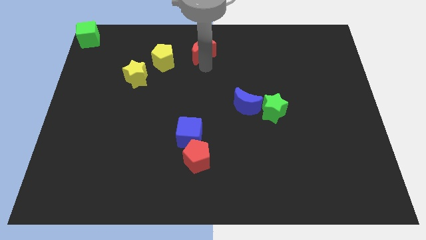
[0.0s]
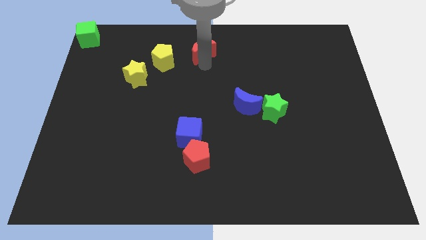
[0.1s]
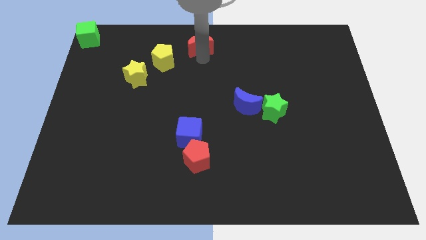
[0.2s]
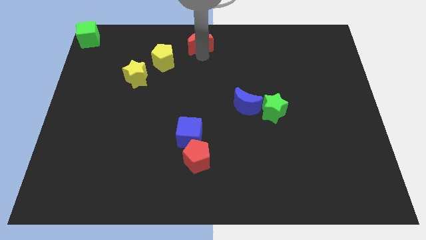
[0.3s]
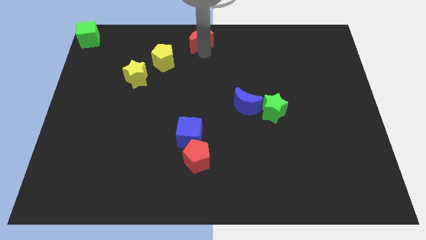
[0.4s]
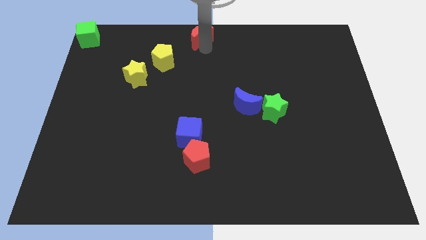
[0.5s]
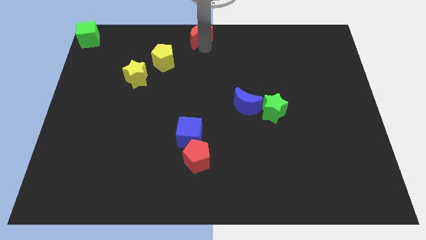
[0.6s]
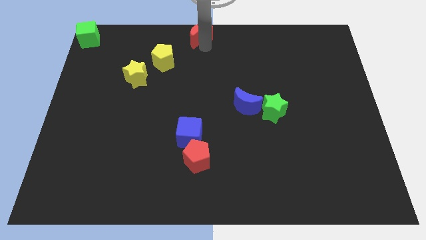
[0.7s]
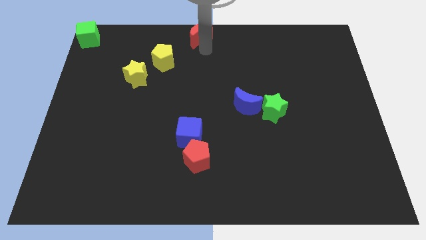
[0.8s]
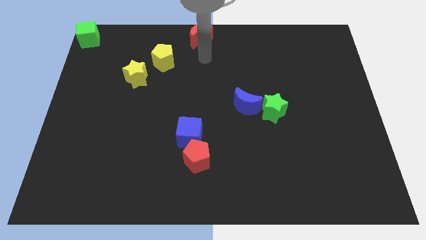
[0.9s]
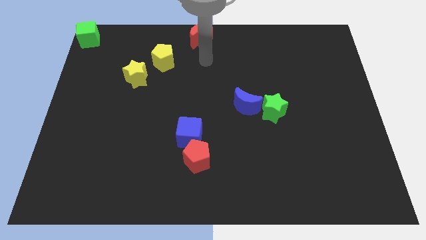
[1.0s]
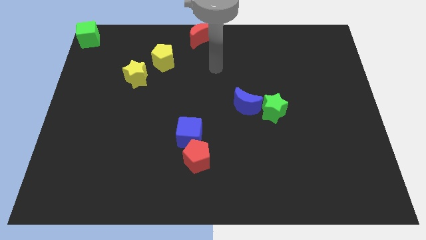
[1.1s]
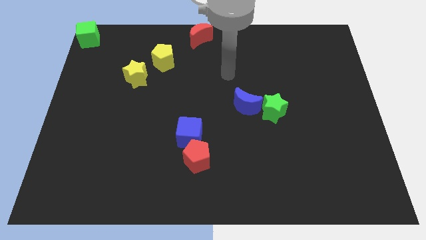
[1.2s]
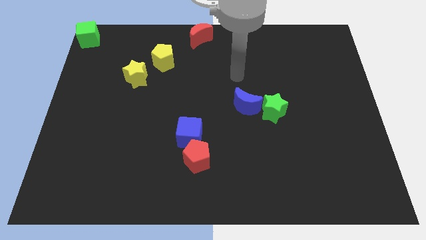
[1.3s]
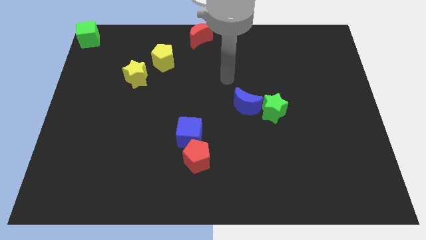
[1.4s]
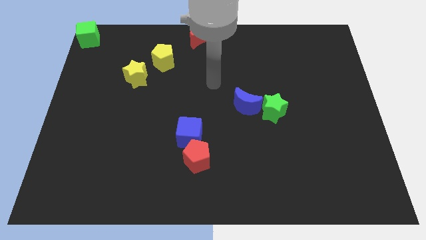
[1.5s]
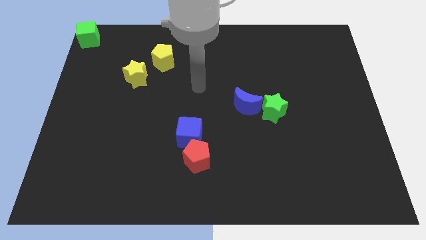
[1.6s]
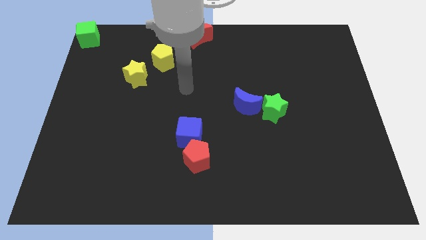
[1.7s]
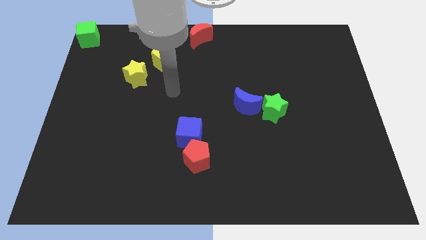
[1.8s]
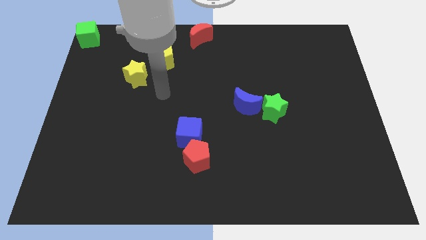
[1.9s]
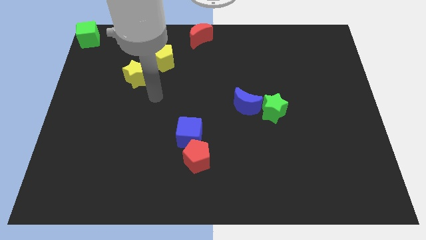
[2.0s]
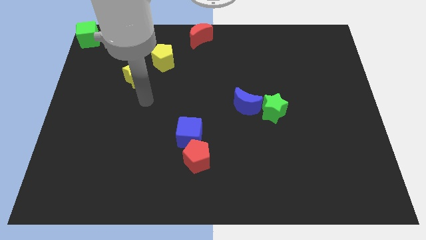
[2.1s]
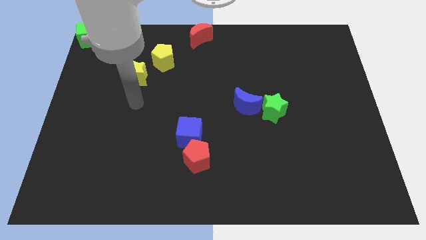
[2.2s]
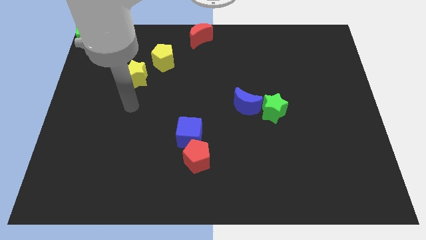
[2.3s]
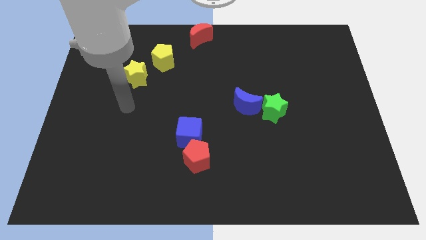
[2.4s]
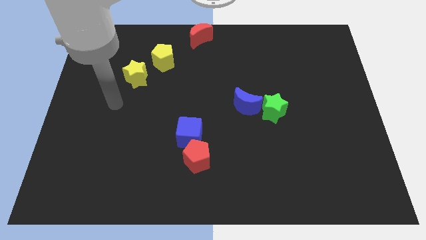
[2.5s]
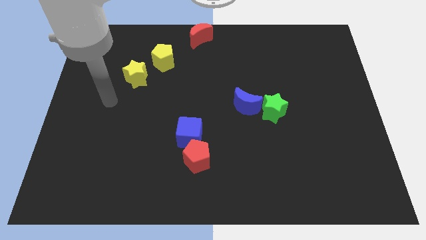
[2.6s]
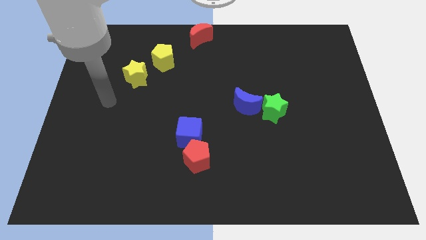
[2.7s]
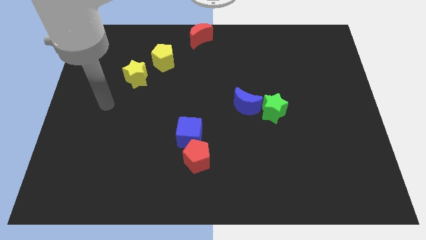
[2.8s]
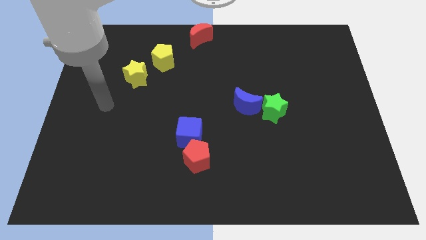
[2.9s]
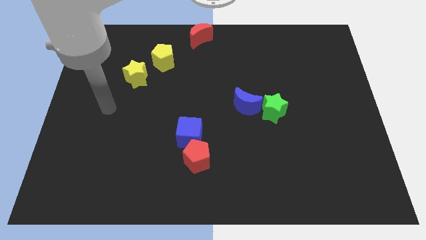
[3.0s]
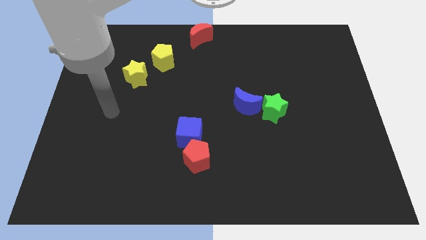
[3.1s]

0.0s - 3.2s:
place the arm diagonal to the yellow star

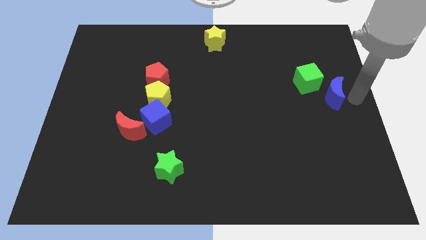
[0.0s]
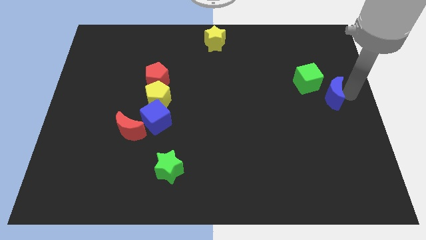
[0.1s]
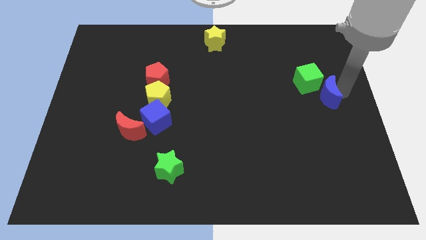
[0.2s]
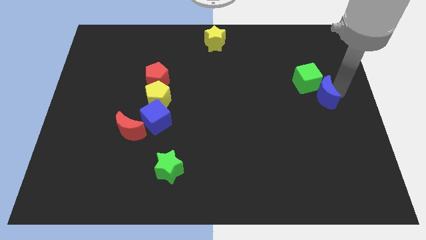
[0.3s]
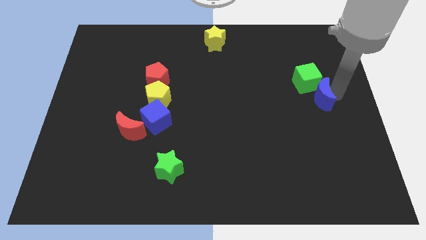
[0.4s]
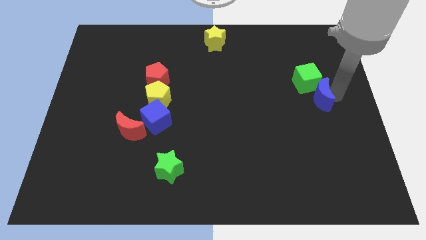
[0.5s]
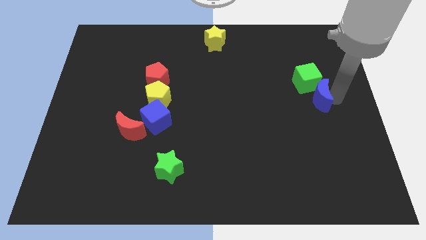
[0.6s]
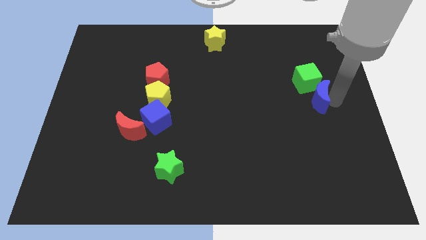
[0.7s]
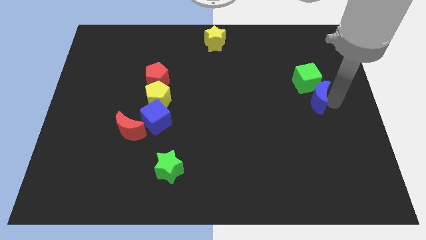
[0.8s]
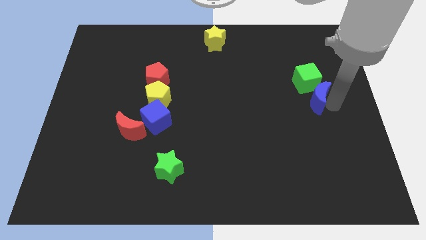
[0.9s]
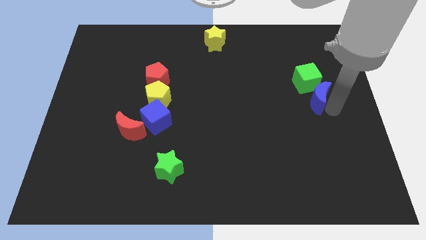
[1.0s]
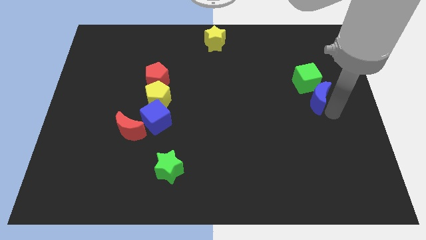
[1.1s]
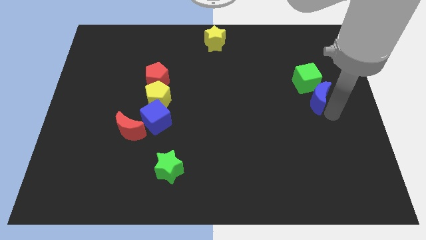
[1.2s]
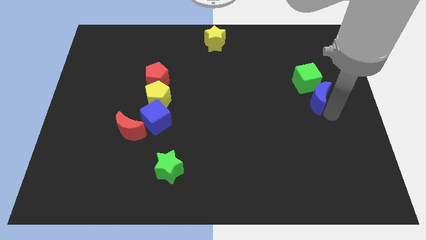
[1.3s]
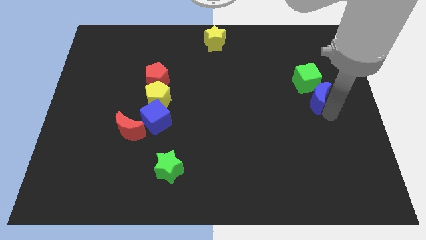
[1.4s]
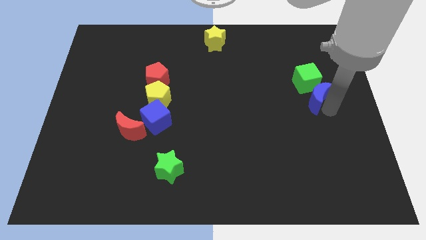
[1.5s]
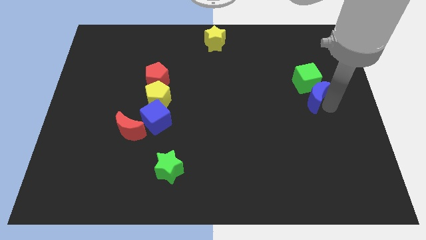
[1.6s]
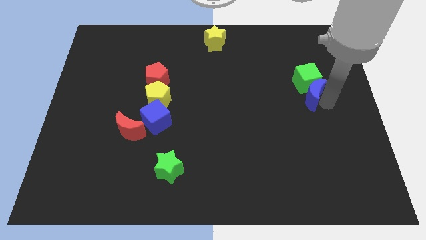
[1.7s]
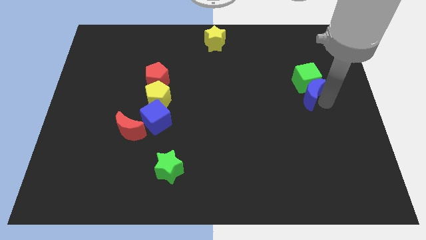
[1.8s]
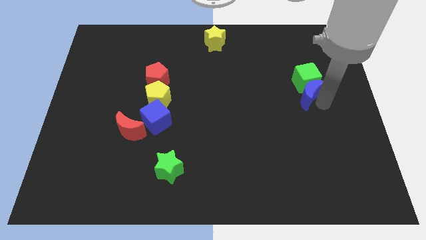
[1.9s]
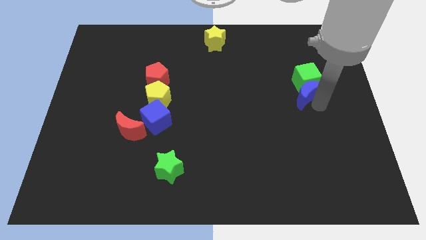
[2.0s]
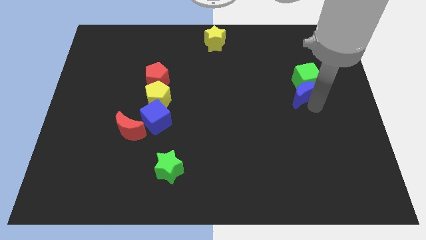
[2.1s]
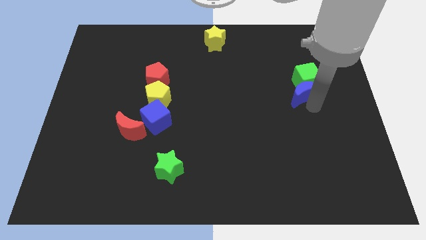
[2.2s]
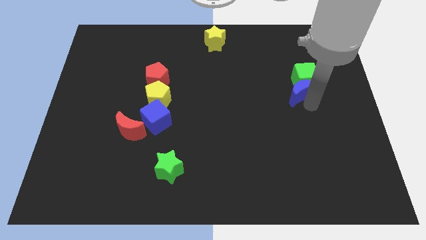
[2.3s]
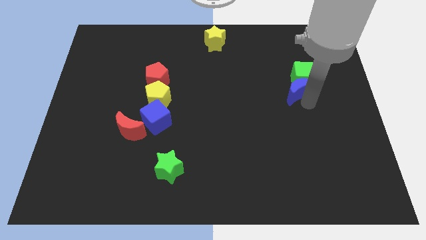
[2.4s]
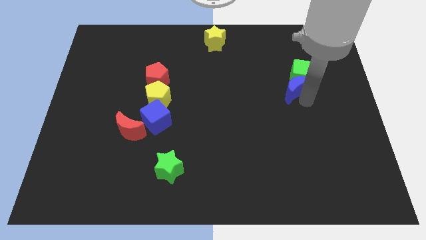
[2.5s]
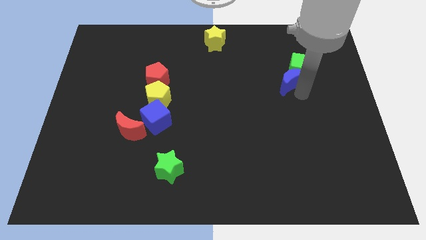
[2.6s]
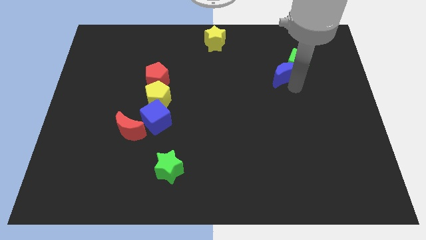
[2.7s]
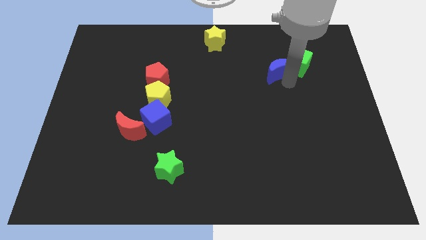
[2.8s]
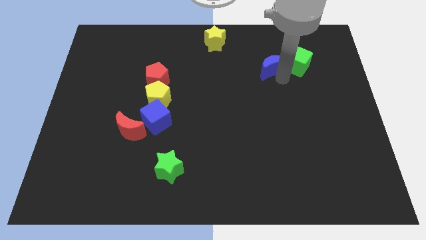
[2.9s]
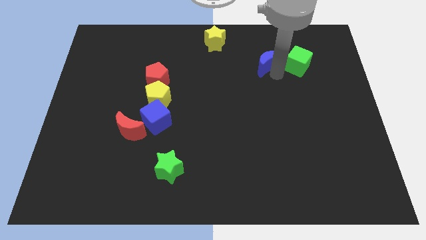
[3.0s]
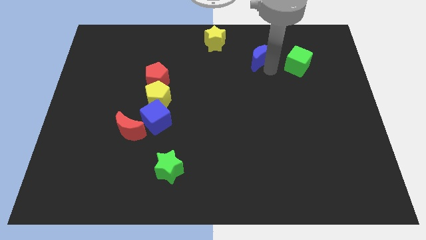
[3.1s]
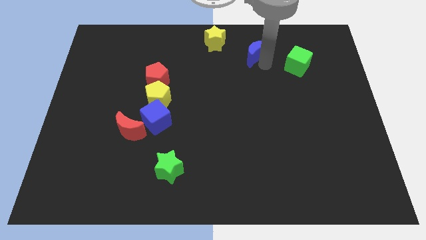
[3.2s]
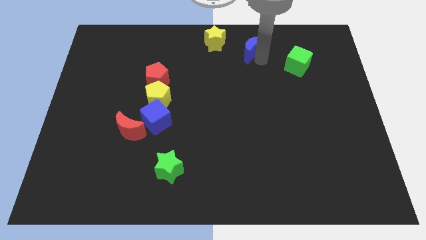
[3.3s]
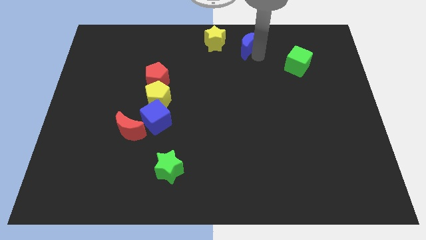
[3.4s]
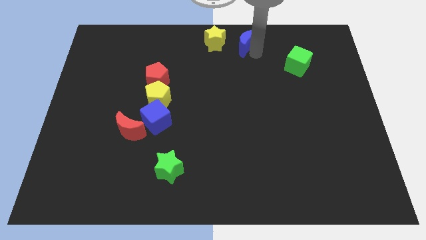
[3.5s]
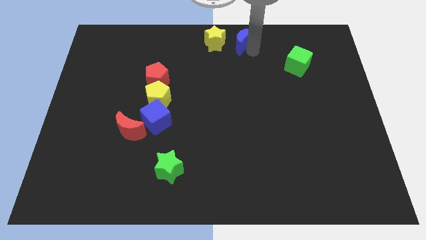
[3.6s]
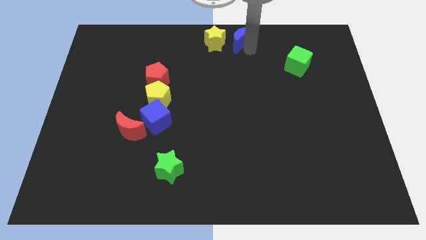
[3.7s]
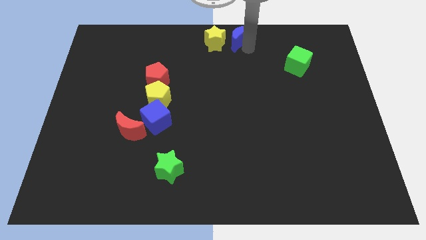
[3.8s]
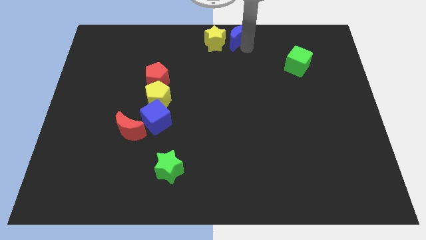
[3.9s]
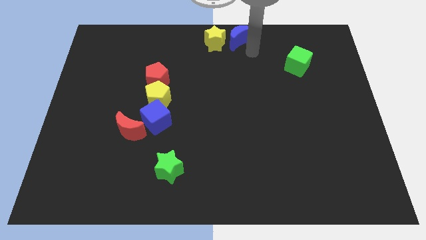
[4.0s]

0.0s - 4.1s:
push the blue crescent right to the yellow star

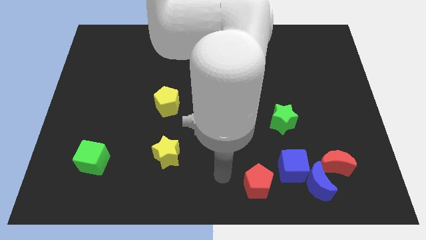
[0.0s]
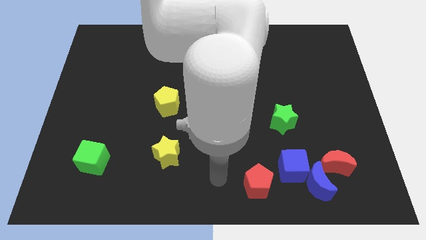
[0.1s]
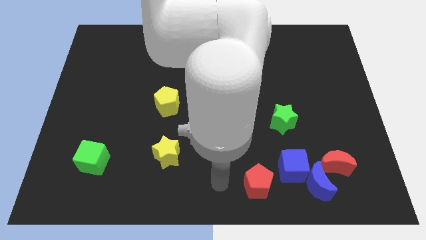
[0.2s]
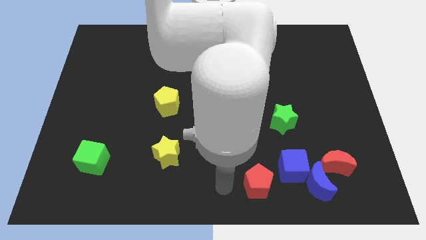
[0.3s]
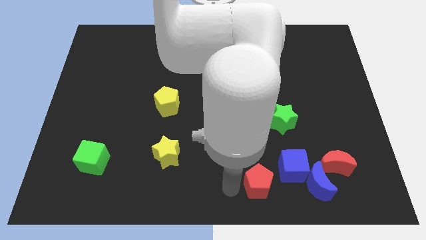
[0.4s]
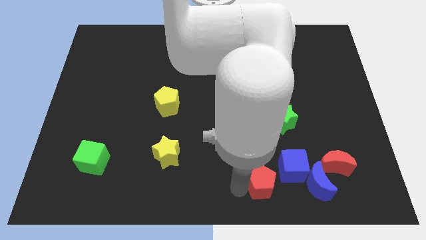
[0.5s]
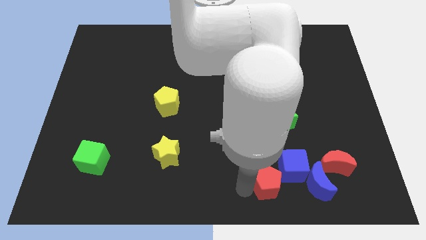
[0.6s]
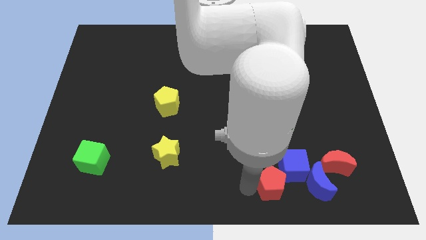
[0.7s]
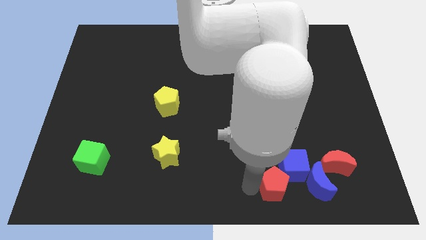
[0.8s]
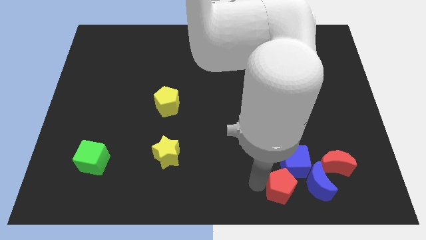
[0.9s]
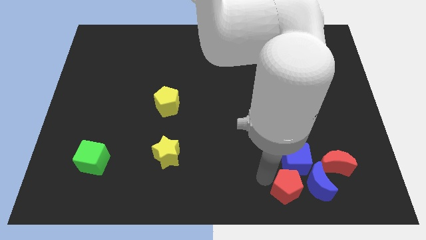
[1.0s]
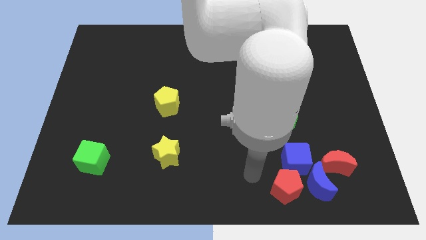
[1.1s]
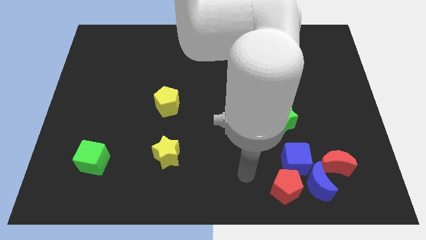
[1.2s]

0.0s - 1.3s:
push the red pentagon into the blue cube
